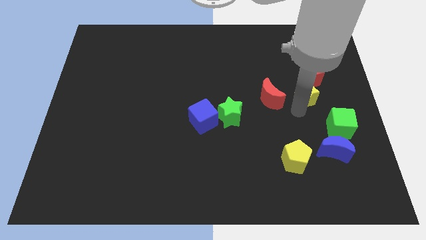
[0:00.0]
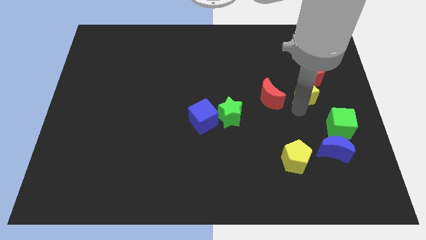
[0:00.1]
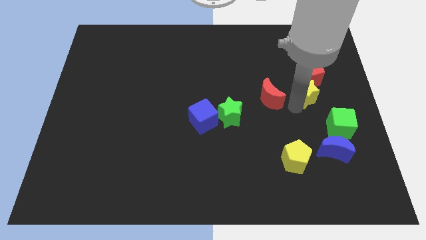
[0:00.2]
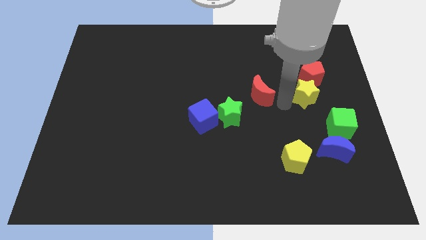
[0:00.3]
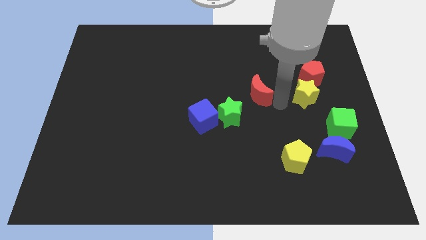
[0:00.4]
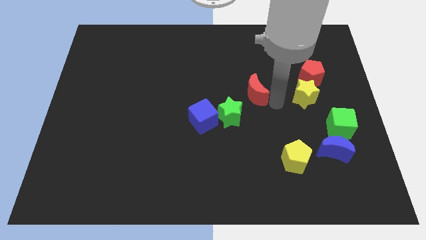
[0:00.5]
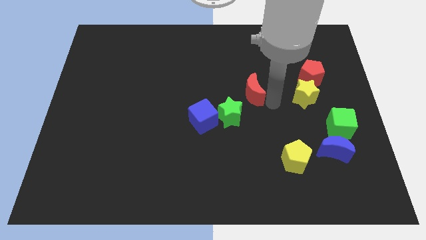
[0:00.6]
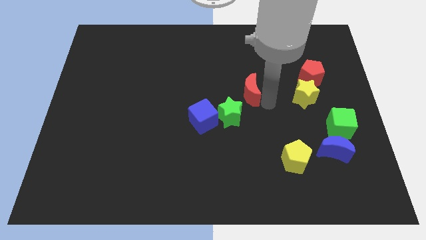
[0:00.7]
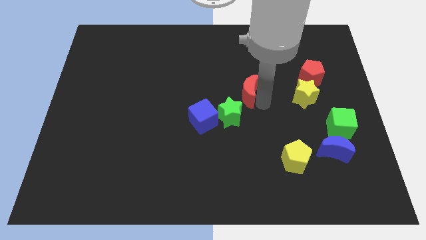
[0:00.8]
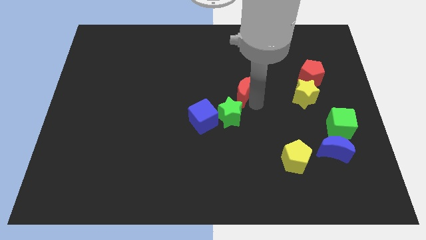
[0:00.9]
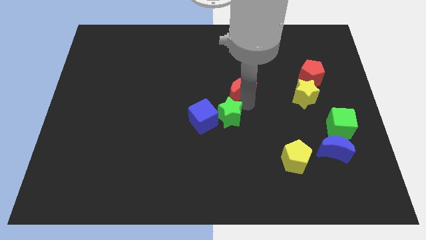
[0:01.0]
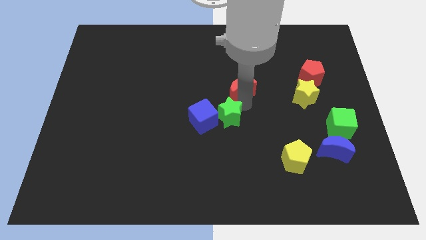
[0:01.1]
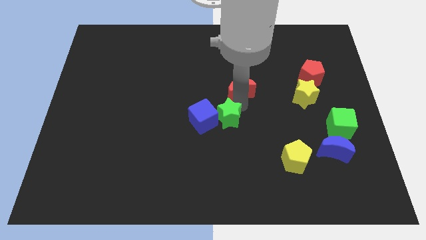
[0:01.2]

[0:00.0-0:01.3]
move the red moon above the green star

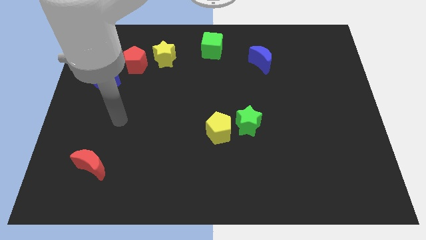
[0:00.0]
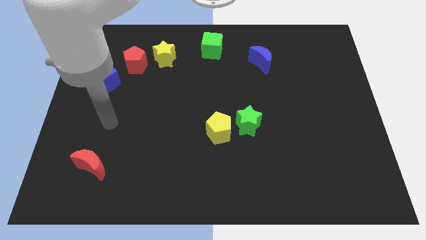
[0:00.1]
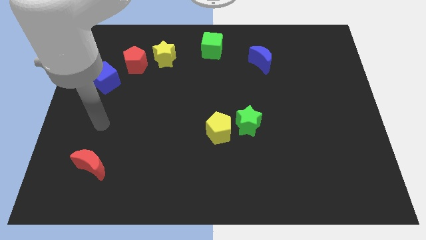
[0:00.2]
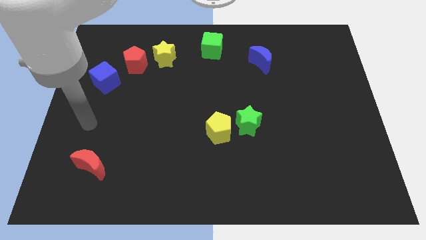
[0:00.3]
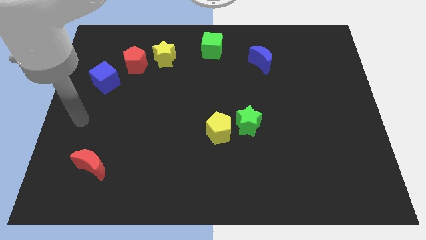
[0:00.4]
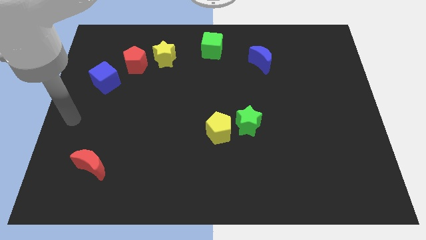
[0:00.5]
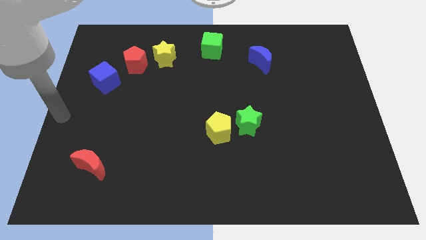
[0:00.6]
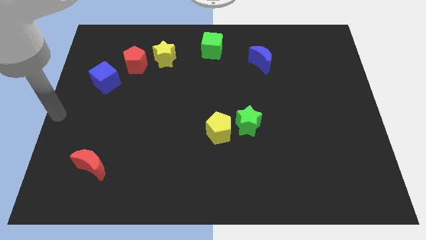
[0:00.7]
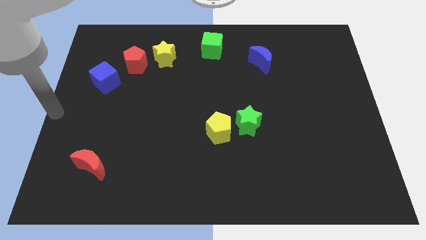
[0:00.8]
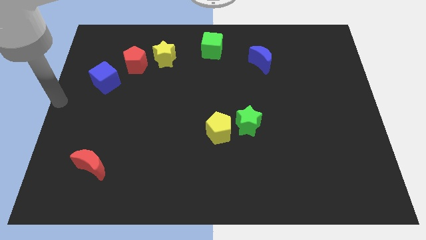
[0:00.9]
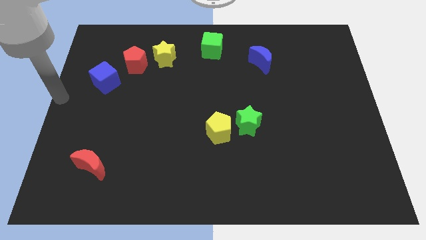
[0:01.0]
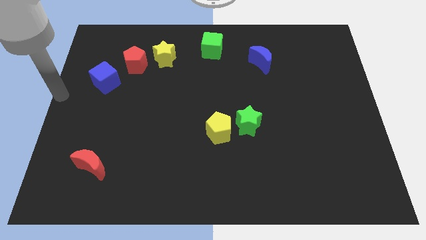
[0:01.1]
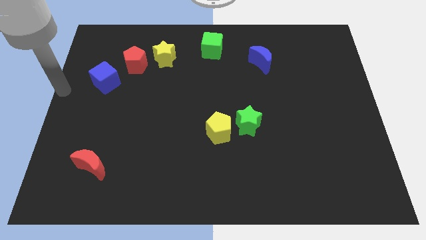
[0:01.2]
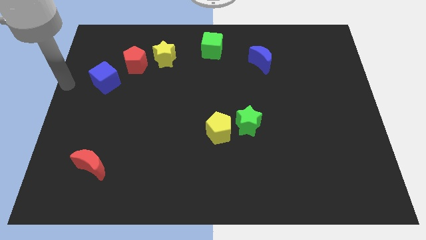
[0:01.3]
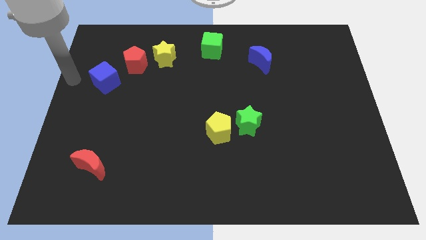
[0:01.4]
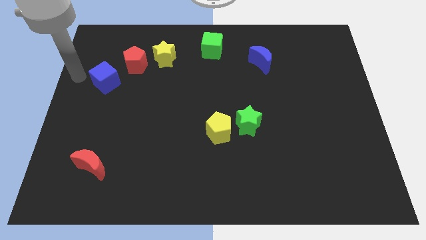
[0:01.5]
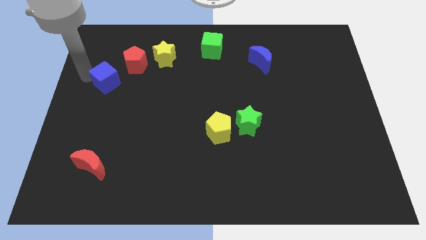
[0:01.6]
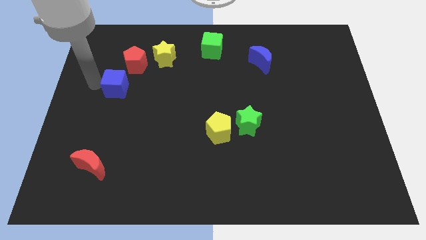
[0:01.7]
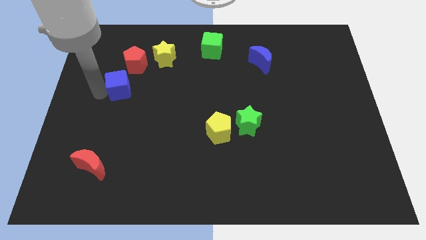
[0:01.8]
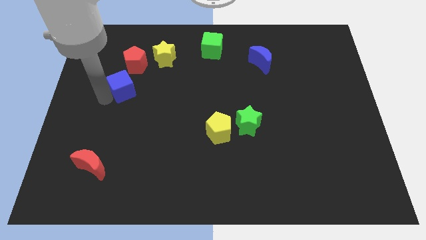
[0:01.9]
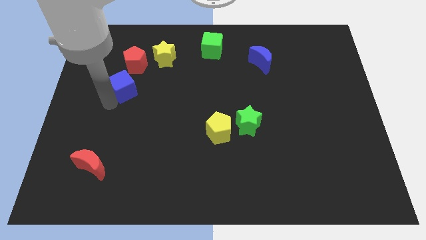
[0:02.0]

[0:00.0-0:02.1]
drag the blue cube slightly to the right

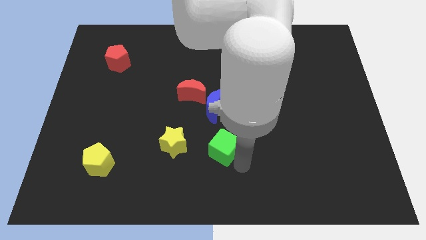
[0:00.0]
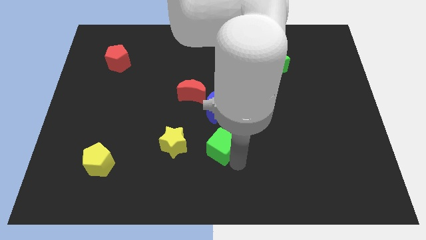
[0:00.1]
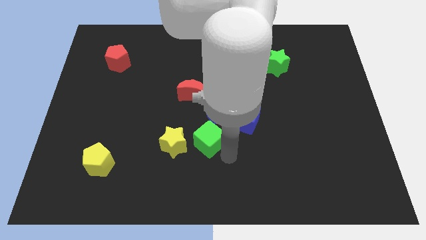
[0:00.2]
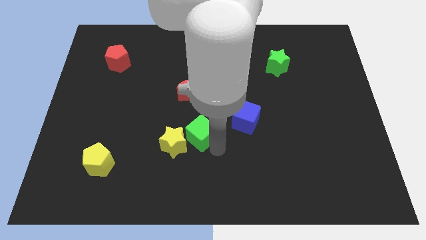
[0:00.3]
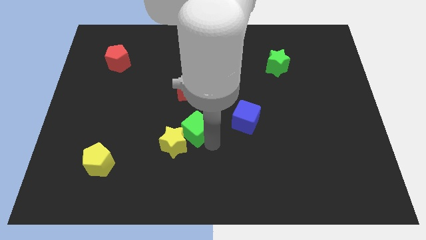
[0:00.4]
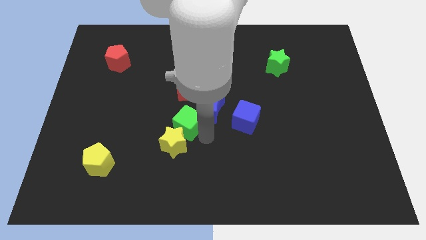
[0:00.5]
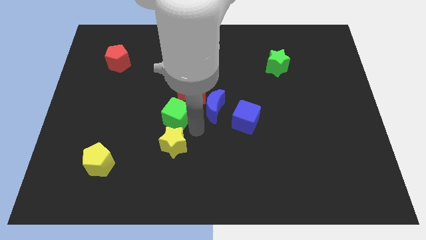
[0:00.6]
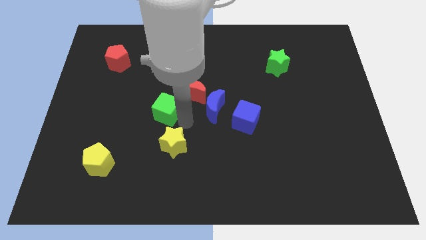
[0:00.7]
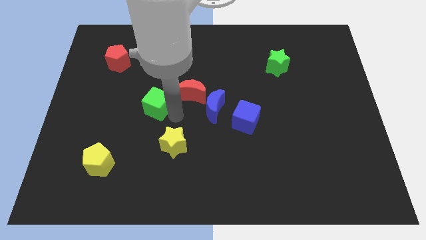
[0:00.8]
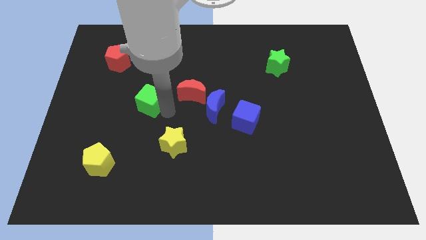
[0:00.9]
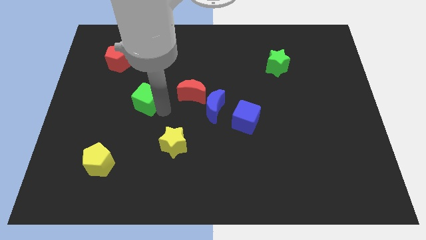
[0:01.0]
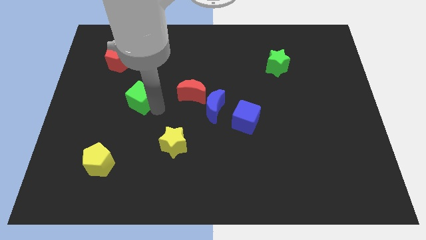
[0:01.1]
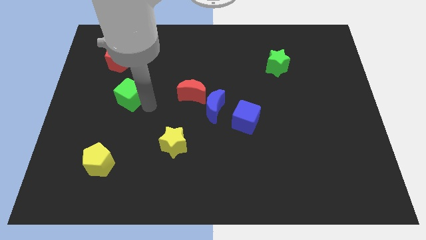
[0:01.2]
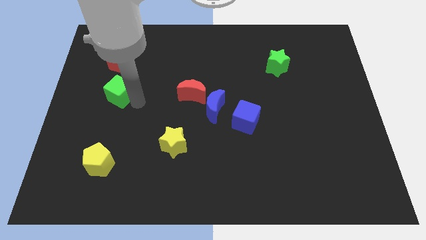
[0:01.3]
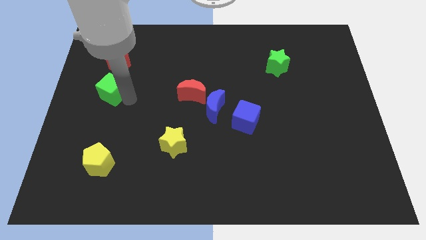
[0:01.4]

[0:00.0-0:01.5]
move the green cube towards the bottom side of the red pentagon

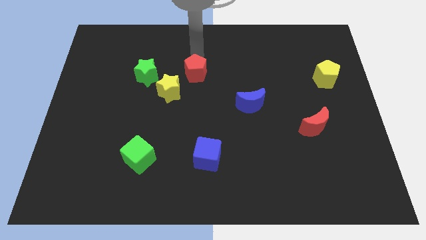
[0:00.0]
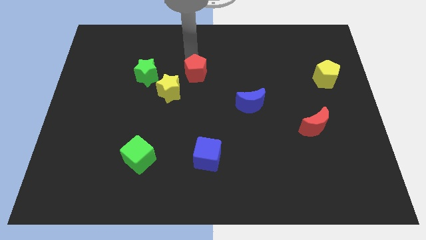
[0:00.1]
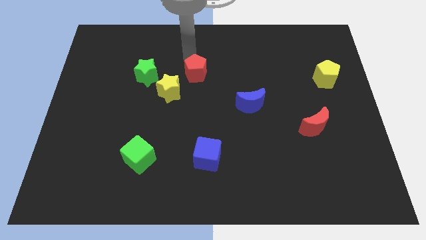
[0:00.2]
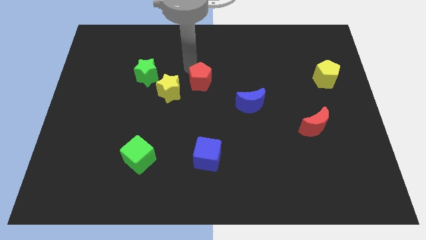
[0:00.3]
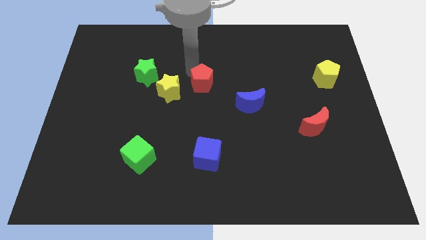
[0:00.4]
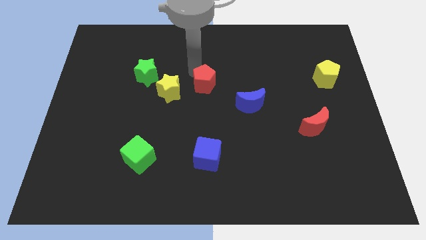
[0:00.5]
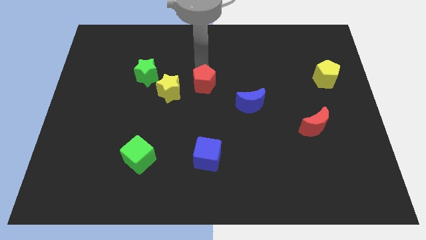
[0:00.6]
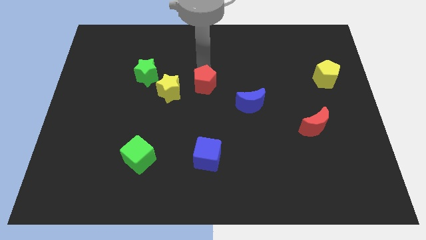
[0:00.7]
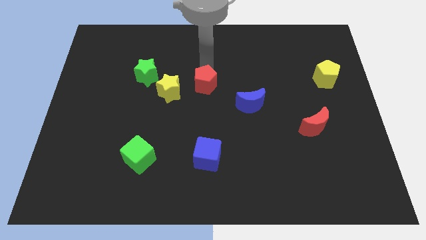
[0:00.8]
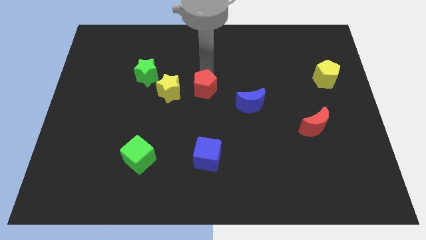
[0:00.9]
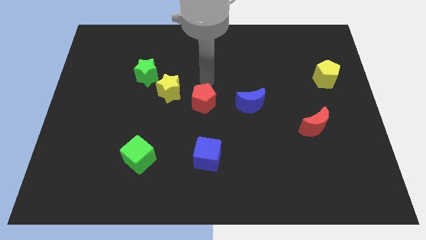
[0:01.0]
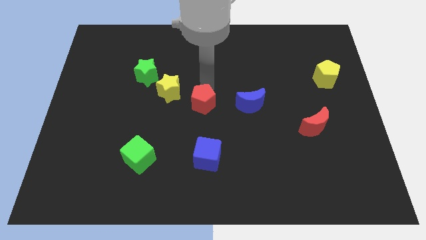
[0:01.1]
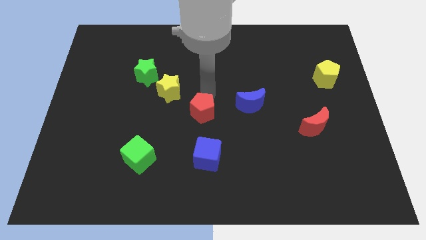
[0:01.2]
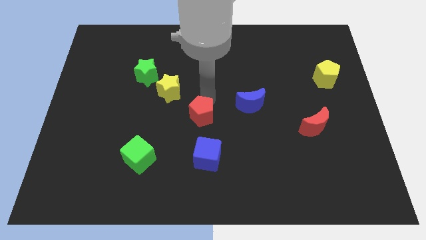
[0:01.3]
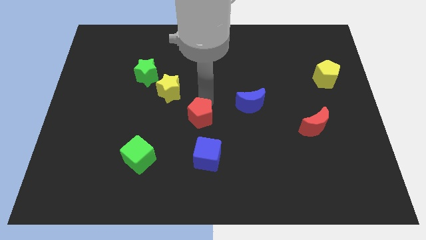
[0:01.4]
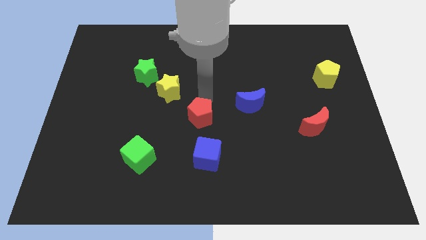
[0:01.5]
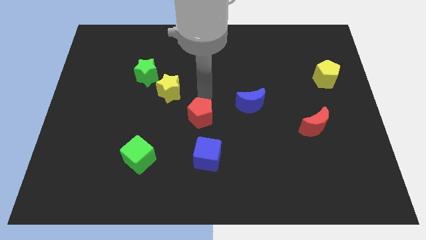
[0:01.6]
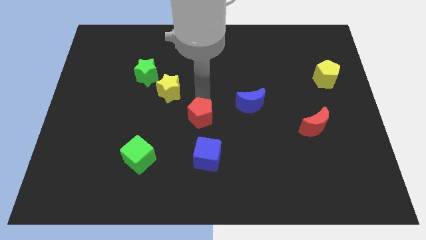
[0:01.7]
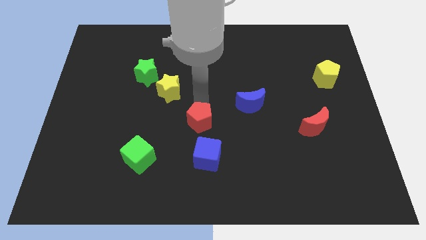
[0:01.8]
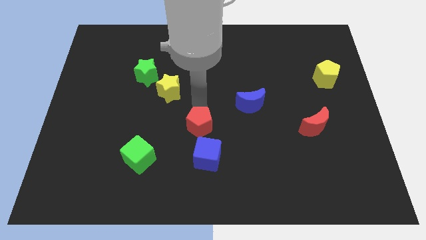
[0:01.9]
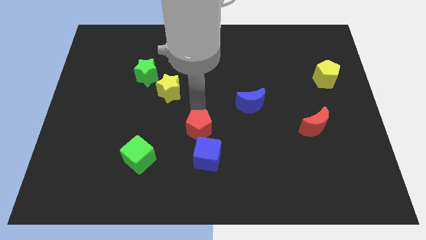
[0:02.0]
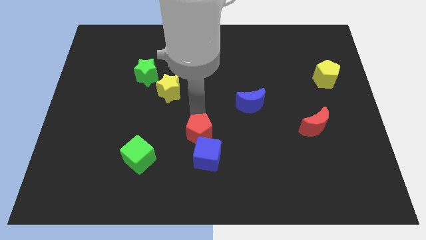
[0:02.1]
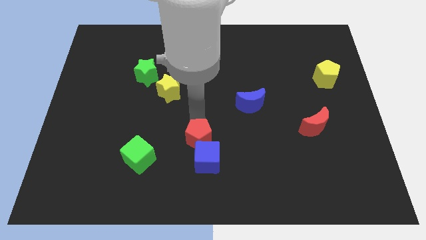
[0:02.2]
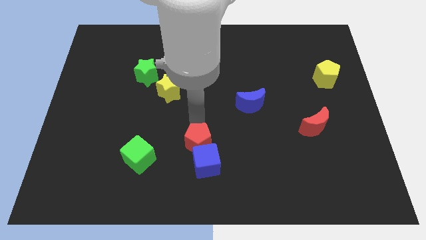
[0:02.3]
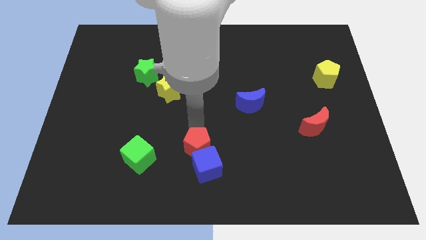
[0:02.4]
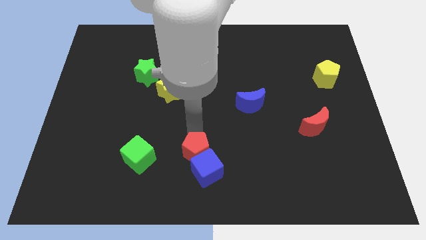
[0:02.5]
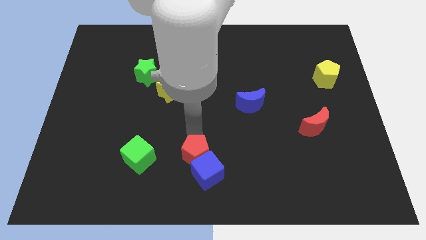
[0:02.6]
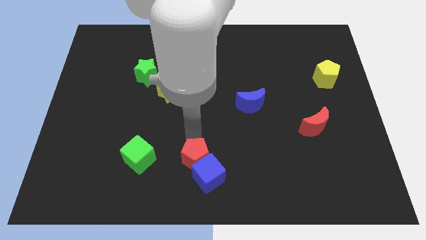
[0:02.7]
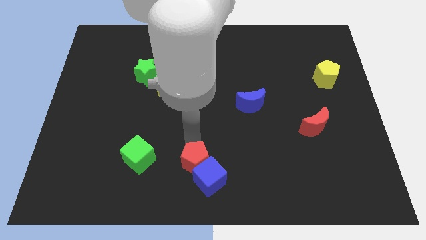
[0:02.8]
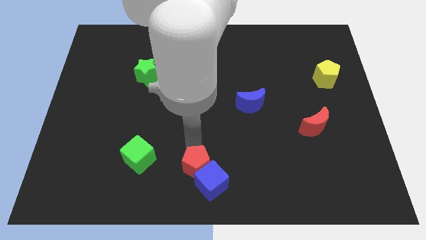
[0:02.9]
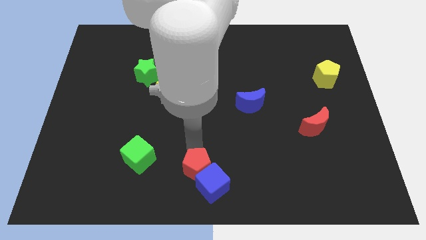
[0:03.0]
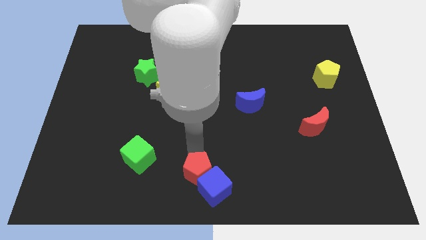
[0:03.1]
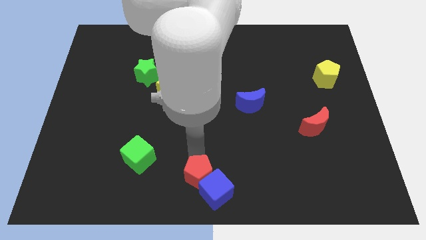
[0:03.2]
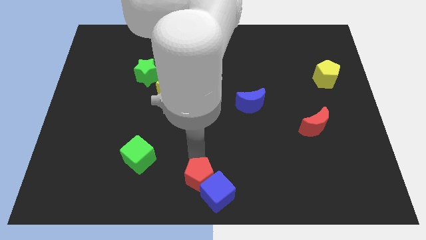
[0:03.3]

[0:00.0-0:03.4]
push the red pentagon into blue cube

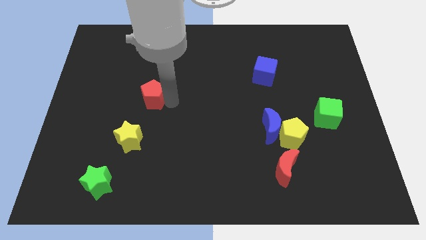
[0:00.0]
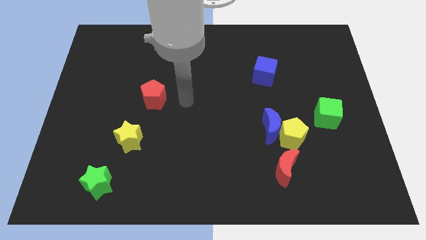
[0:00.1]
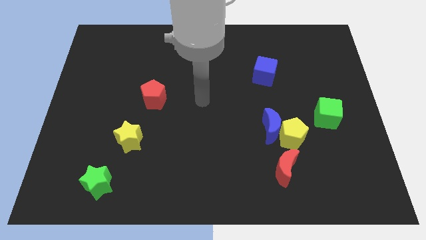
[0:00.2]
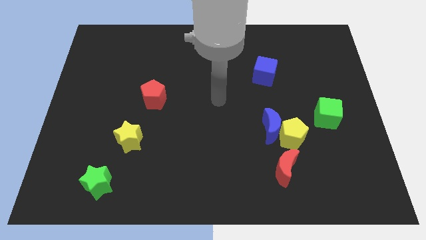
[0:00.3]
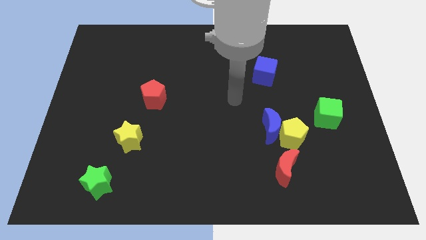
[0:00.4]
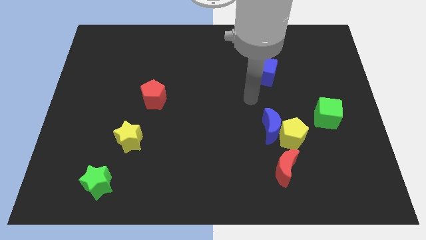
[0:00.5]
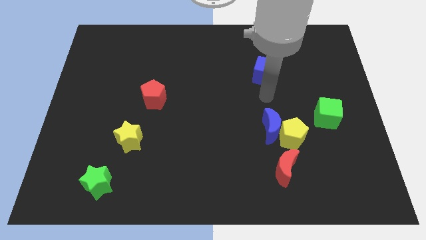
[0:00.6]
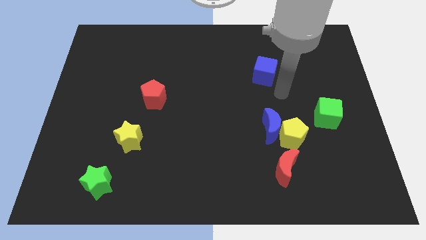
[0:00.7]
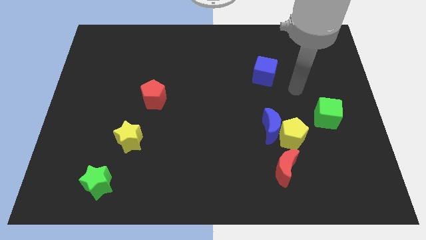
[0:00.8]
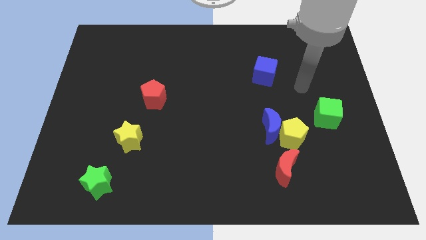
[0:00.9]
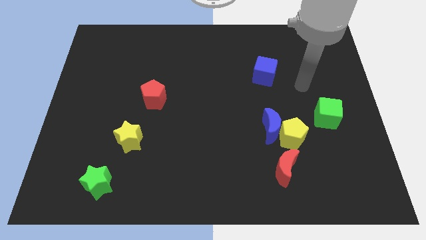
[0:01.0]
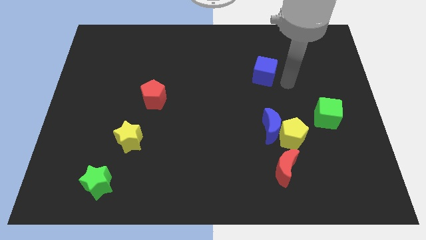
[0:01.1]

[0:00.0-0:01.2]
point your arm at the right of the blue cube
